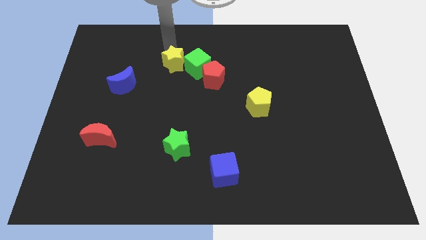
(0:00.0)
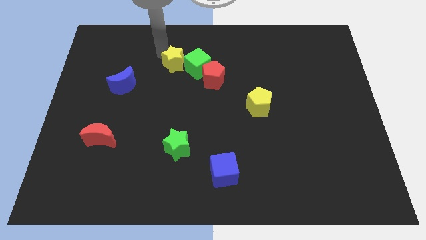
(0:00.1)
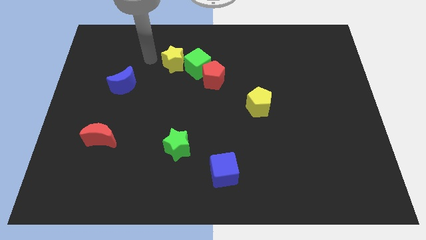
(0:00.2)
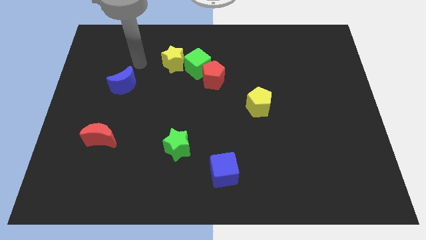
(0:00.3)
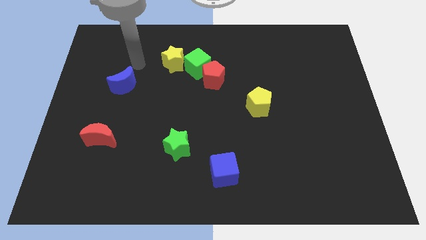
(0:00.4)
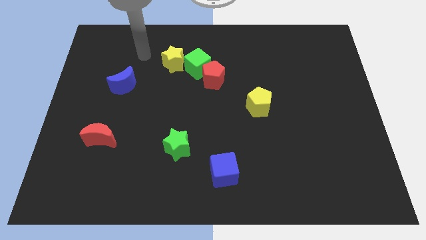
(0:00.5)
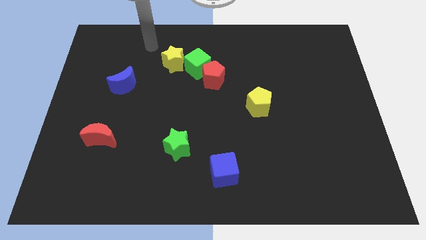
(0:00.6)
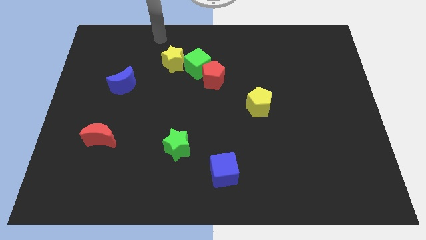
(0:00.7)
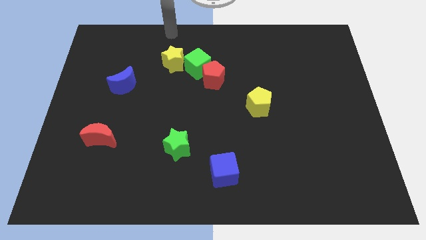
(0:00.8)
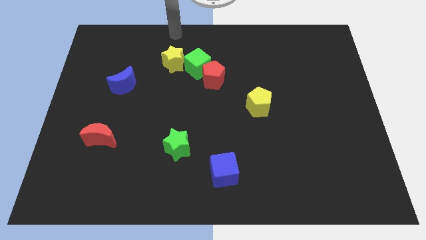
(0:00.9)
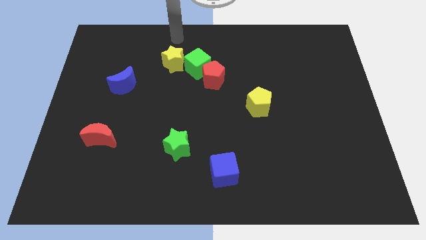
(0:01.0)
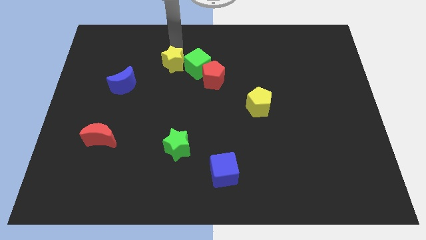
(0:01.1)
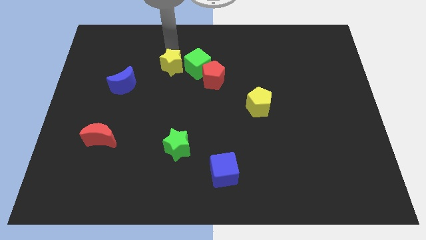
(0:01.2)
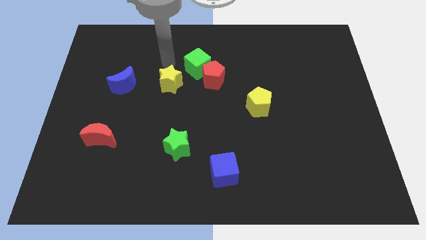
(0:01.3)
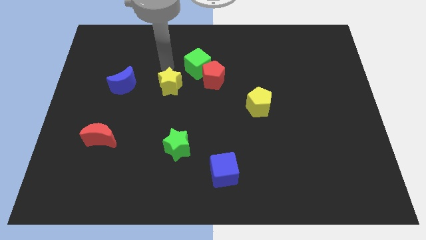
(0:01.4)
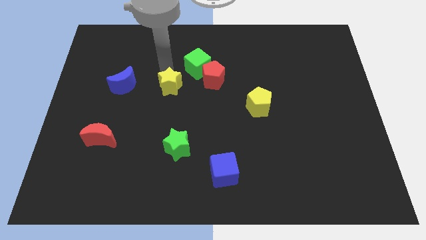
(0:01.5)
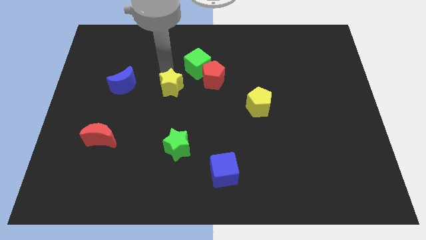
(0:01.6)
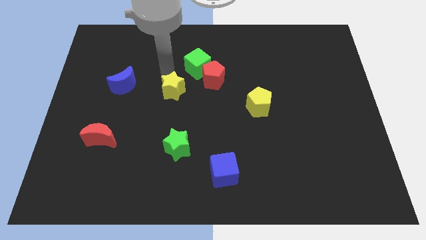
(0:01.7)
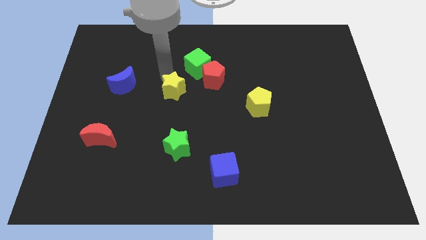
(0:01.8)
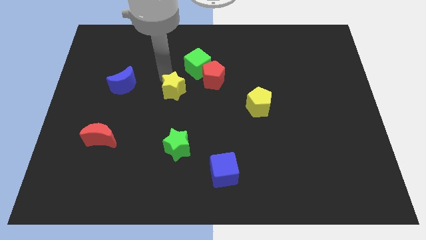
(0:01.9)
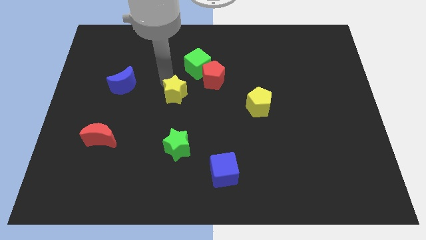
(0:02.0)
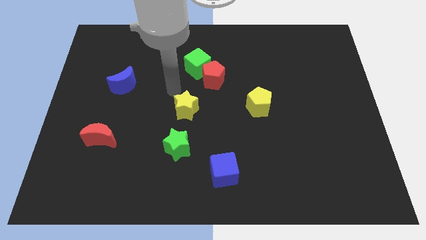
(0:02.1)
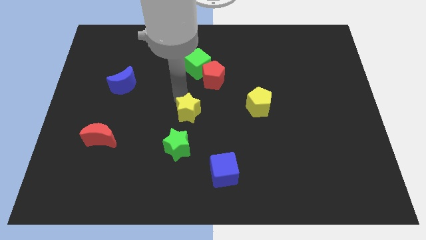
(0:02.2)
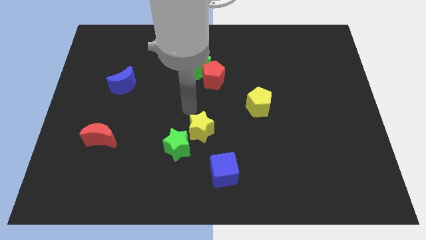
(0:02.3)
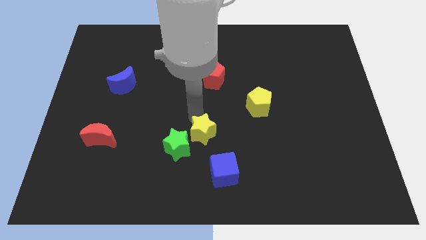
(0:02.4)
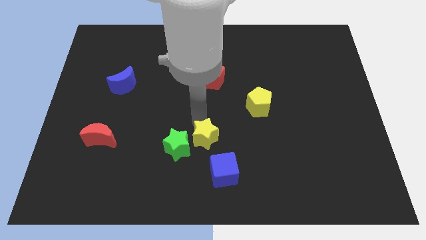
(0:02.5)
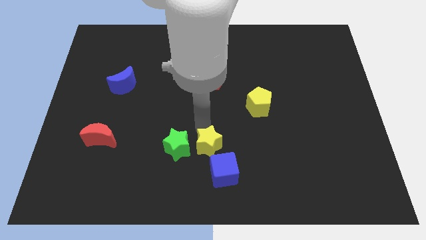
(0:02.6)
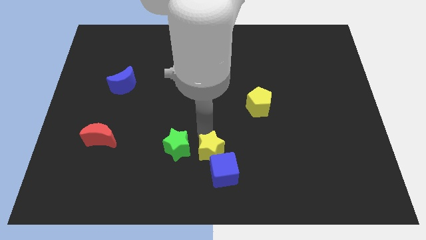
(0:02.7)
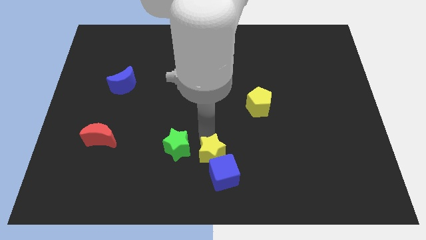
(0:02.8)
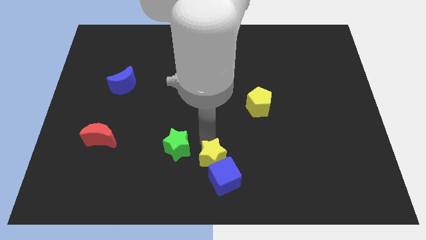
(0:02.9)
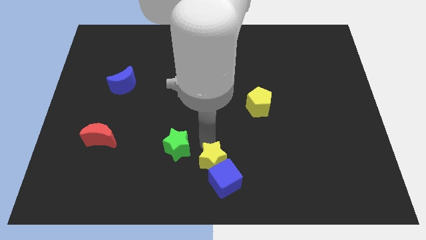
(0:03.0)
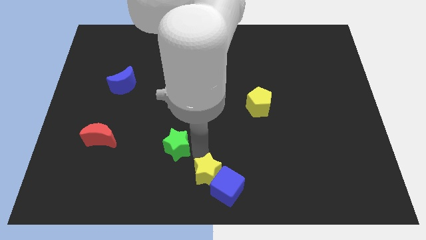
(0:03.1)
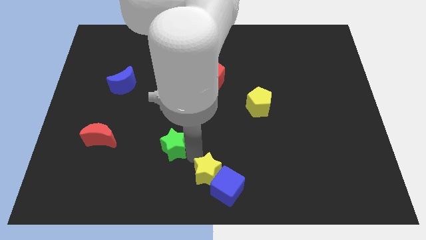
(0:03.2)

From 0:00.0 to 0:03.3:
place the yellow star near the blue cube

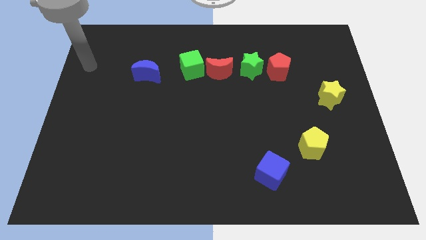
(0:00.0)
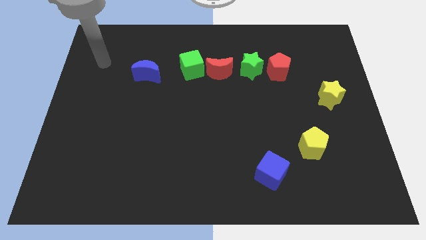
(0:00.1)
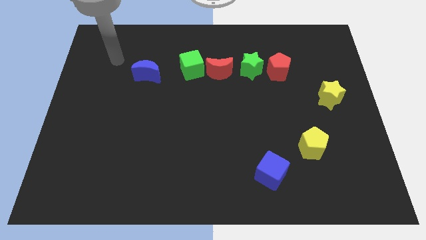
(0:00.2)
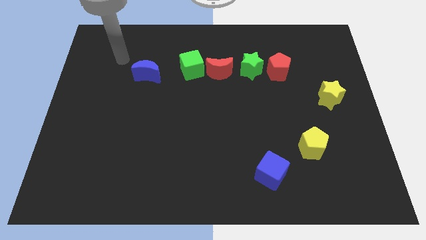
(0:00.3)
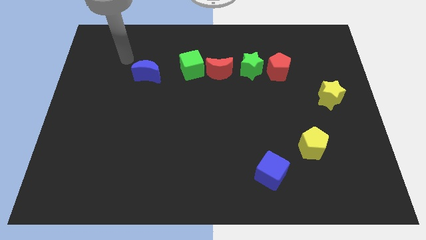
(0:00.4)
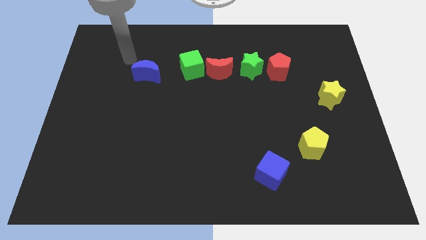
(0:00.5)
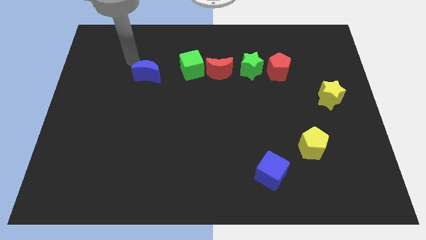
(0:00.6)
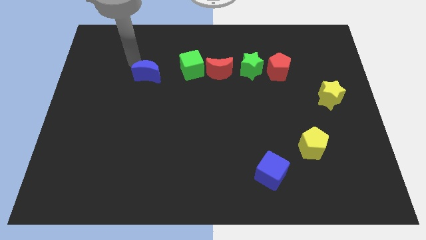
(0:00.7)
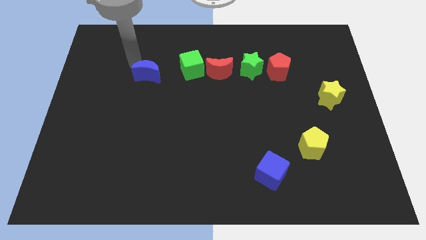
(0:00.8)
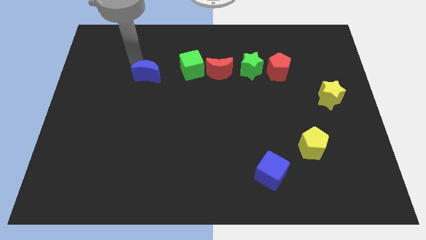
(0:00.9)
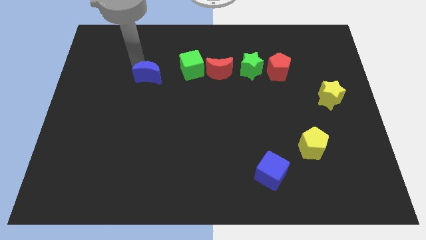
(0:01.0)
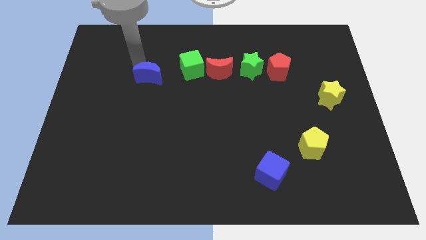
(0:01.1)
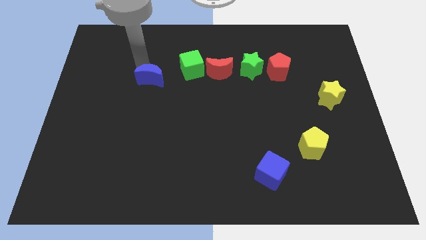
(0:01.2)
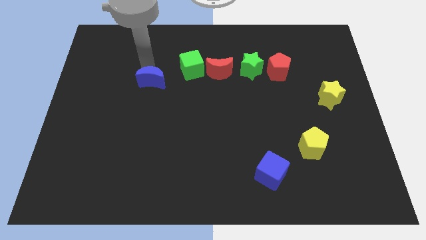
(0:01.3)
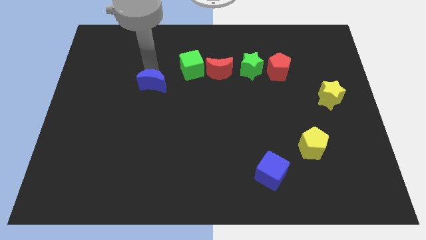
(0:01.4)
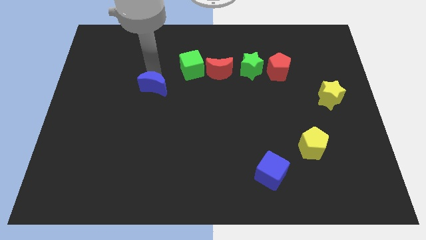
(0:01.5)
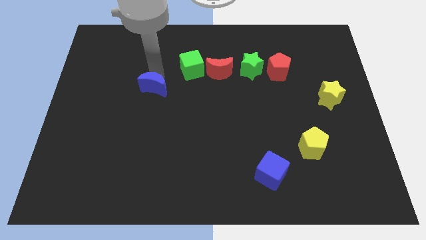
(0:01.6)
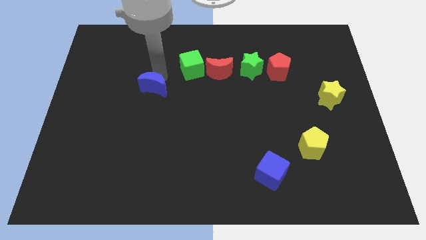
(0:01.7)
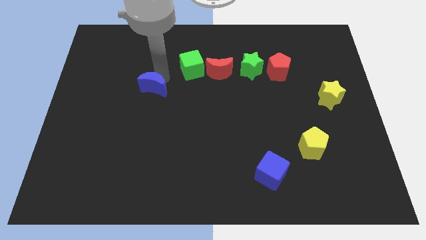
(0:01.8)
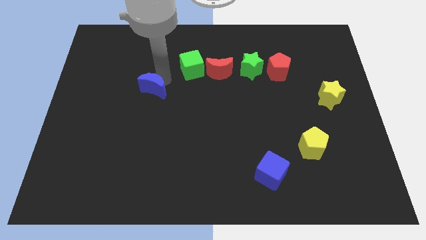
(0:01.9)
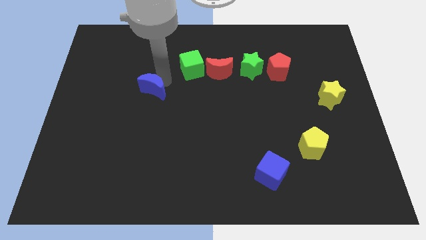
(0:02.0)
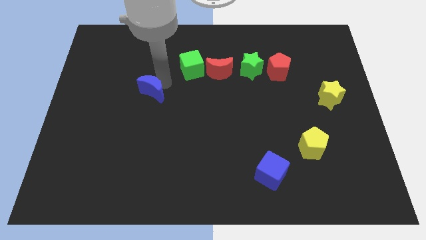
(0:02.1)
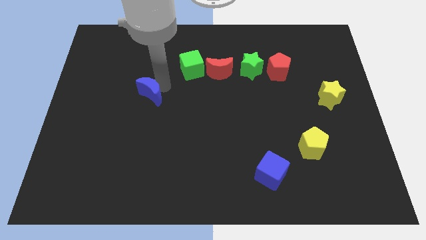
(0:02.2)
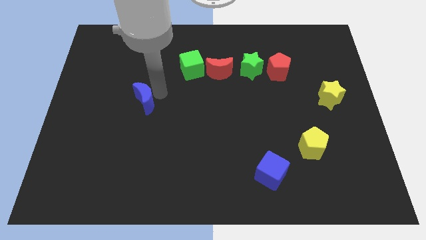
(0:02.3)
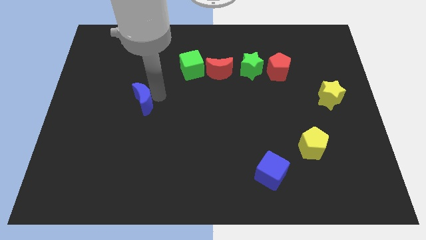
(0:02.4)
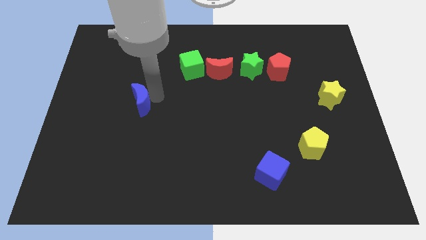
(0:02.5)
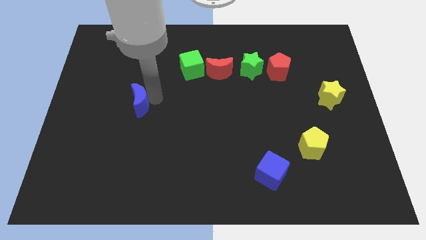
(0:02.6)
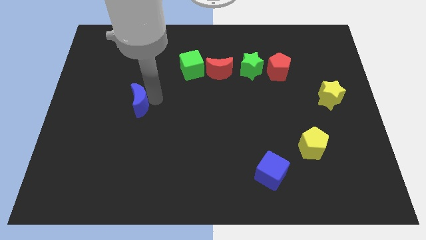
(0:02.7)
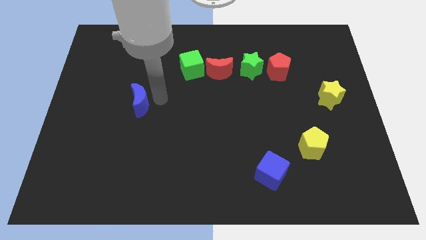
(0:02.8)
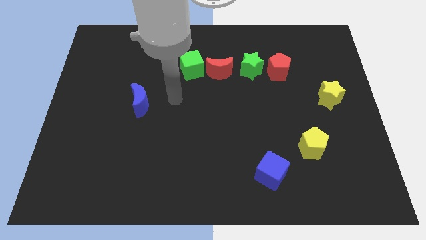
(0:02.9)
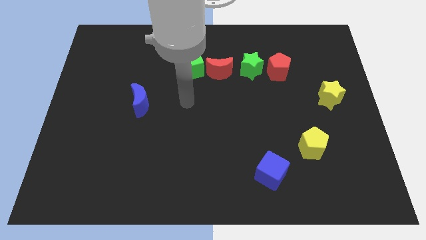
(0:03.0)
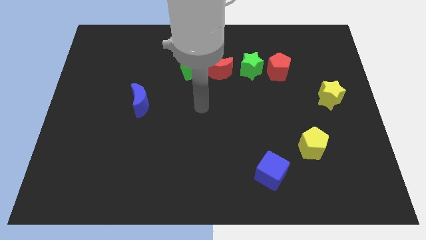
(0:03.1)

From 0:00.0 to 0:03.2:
move the blue crescent diagonally on the bottom left side of the green cube

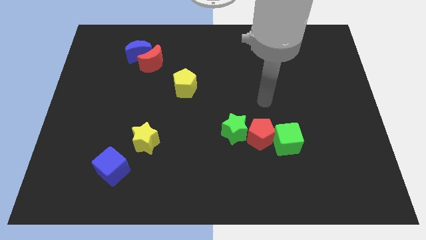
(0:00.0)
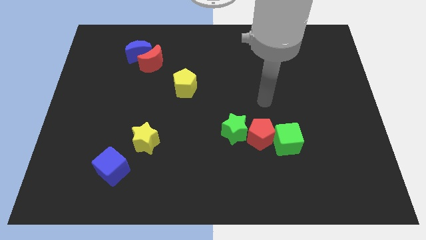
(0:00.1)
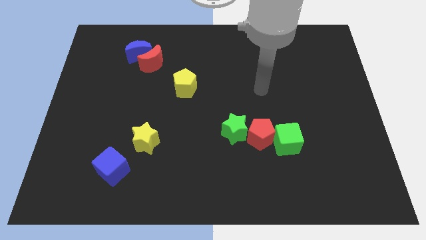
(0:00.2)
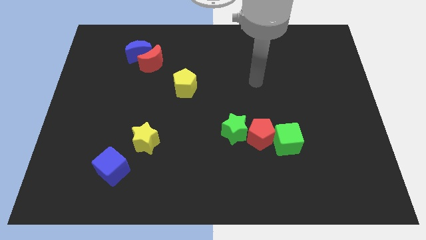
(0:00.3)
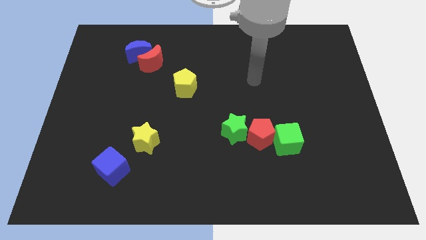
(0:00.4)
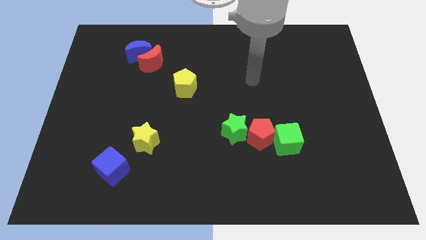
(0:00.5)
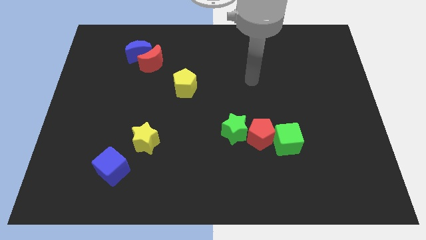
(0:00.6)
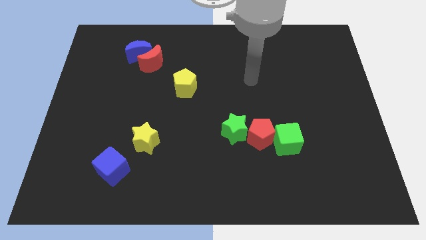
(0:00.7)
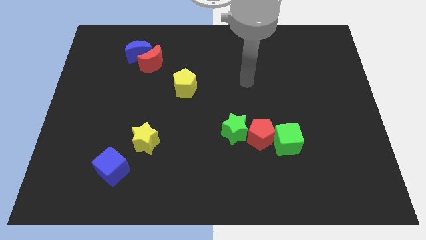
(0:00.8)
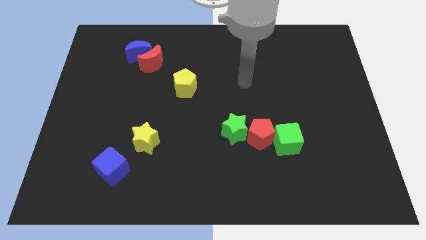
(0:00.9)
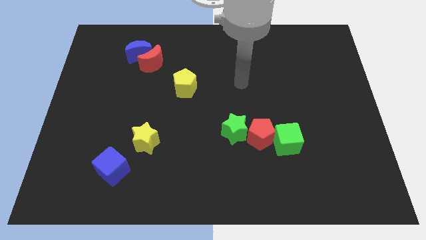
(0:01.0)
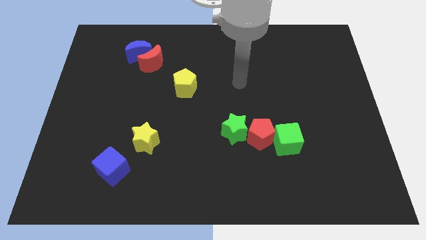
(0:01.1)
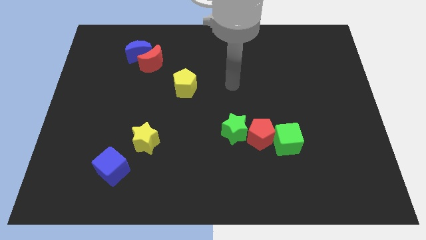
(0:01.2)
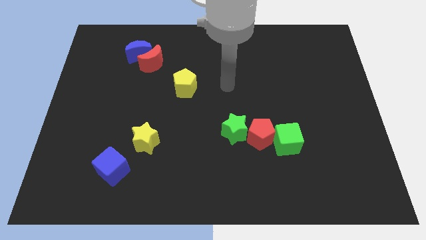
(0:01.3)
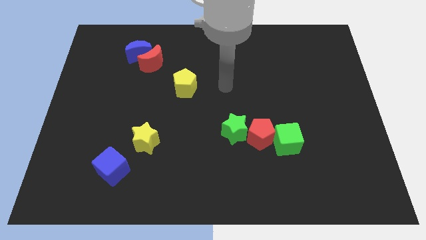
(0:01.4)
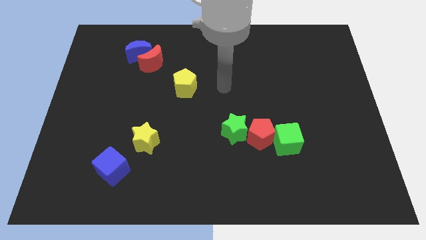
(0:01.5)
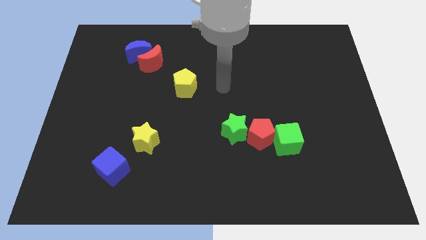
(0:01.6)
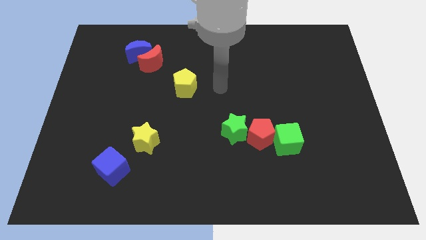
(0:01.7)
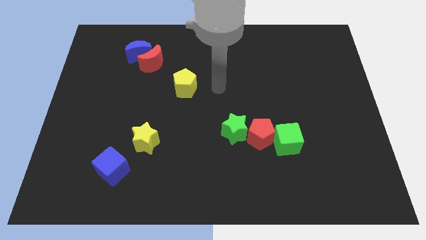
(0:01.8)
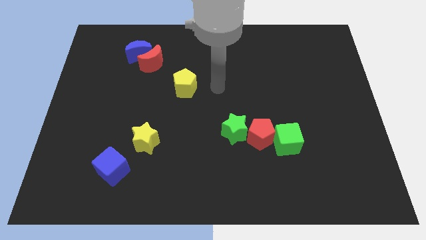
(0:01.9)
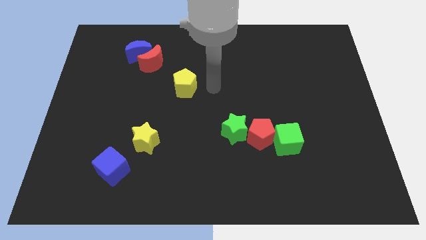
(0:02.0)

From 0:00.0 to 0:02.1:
move your hand towards the right side of the yellow pentagon

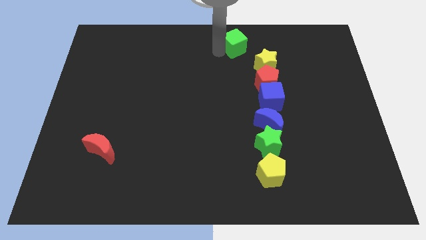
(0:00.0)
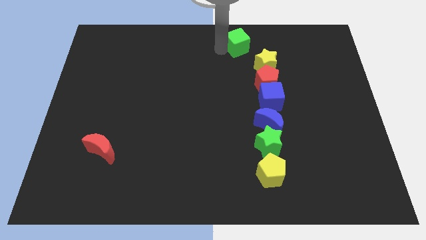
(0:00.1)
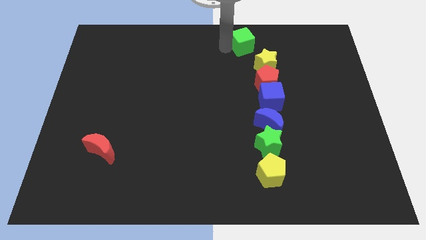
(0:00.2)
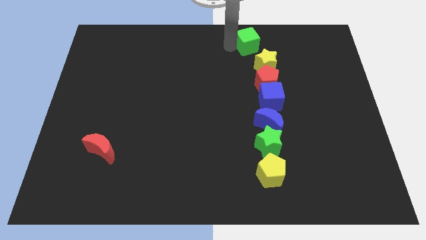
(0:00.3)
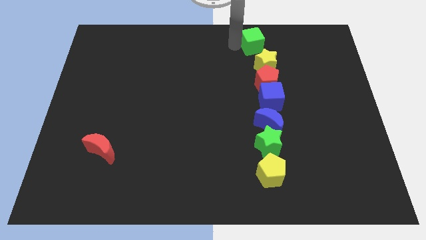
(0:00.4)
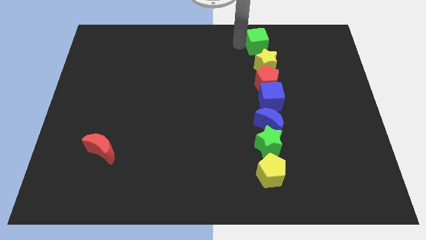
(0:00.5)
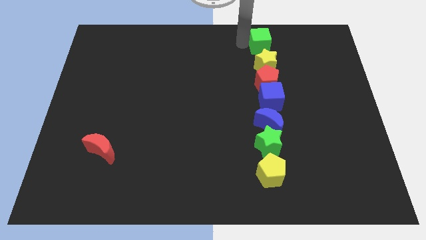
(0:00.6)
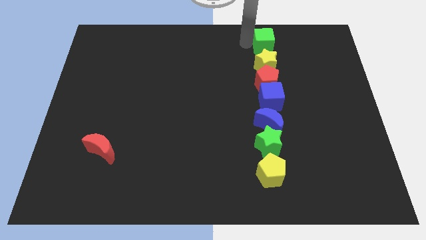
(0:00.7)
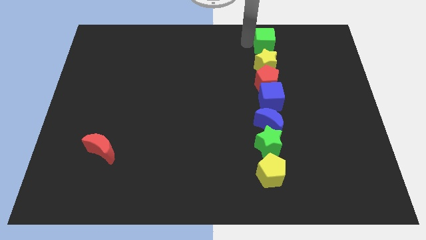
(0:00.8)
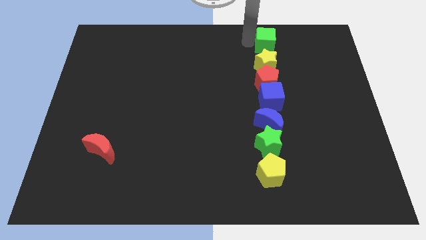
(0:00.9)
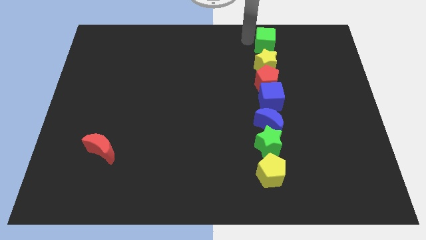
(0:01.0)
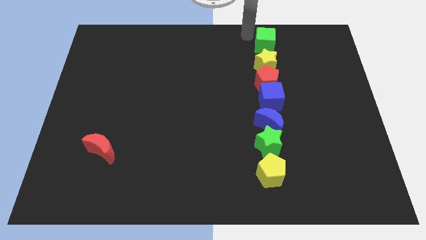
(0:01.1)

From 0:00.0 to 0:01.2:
place green cube to the top of yellow star
